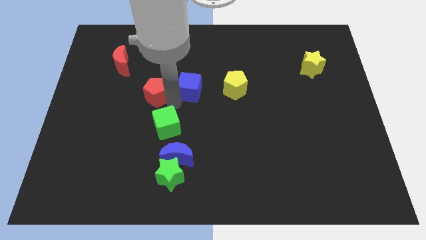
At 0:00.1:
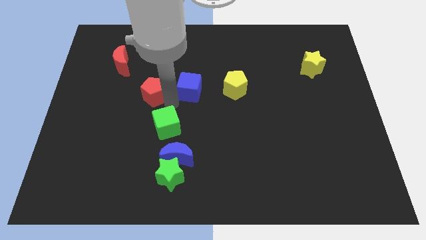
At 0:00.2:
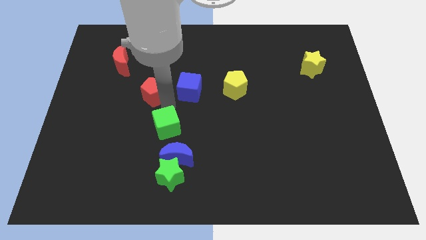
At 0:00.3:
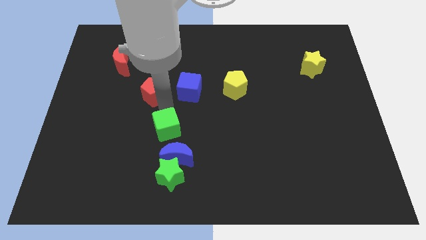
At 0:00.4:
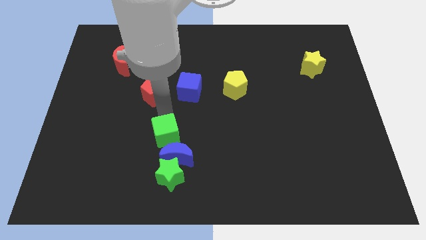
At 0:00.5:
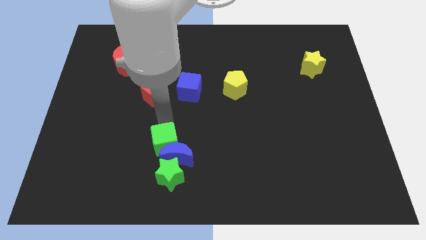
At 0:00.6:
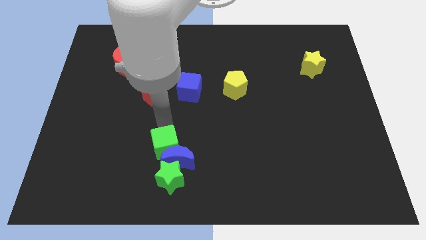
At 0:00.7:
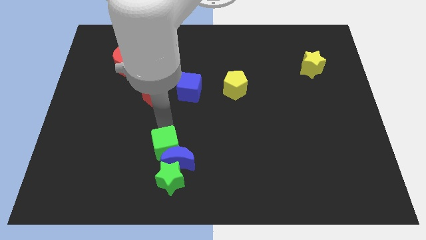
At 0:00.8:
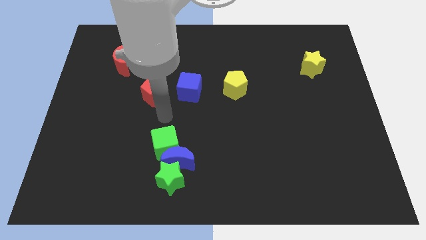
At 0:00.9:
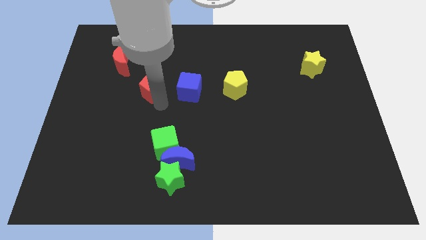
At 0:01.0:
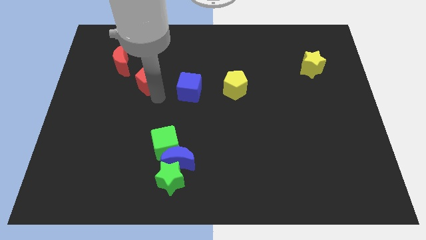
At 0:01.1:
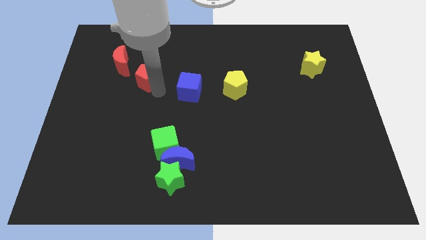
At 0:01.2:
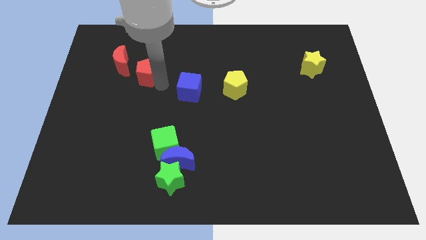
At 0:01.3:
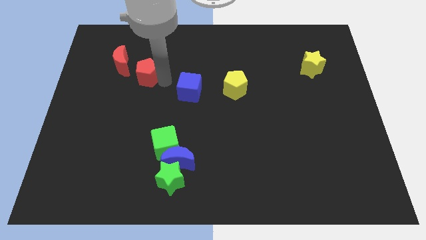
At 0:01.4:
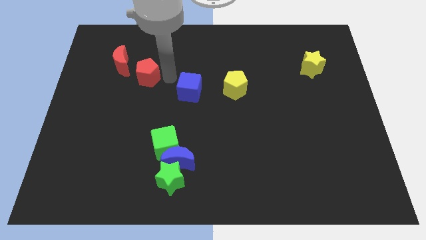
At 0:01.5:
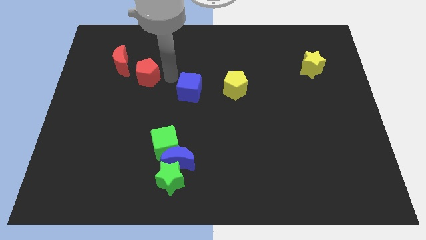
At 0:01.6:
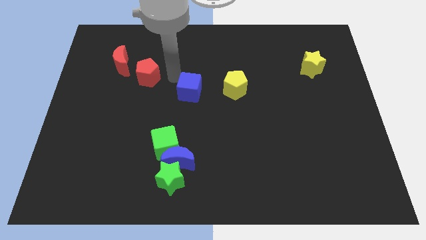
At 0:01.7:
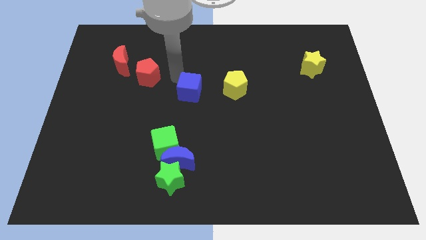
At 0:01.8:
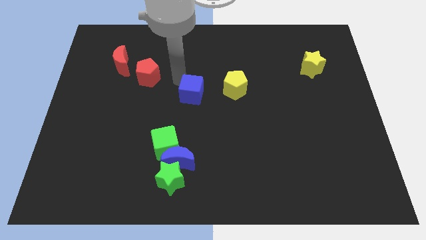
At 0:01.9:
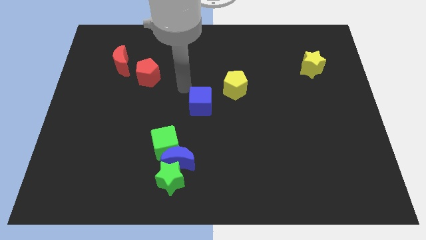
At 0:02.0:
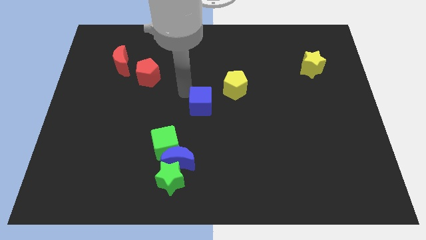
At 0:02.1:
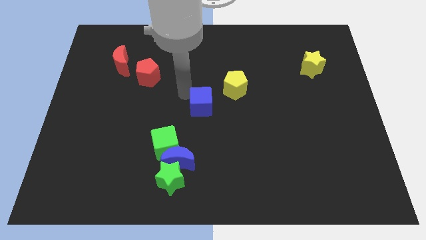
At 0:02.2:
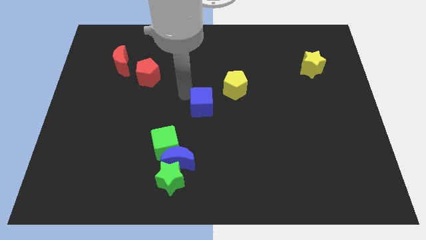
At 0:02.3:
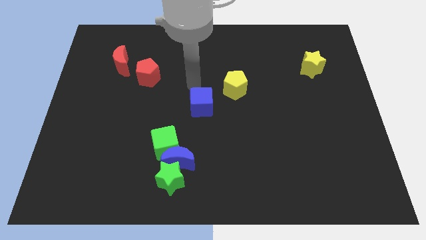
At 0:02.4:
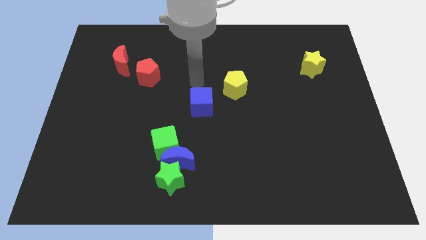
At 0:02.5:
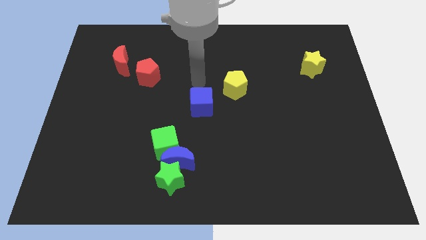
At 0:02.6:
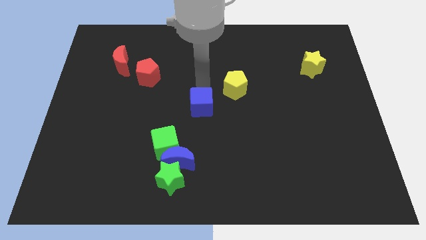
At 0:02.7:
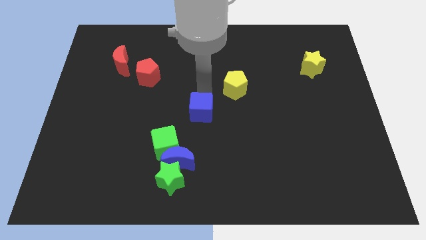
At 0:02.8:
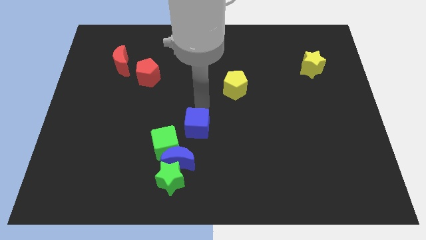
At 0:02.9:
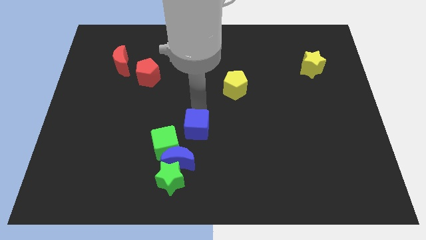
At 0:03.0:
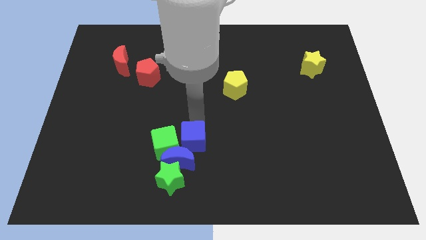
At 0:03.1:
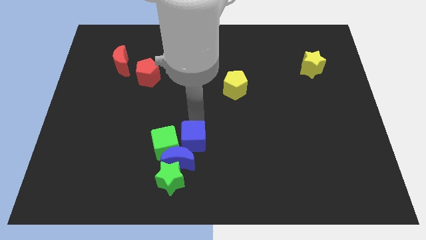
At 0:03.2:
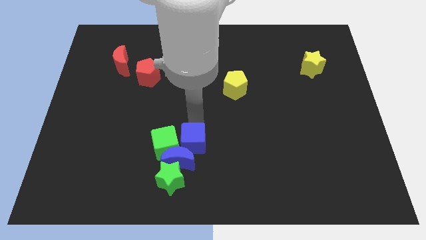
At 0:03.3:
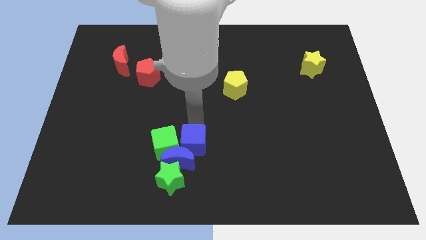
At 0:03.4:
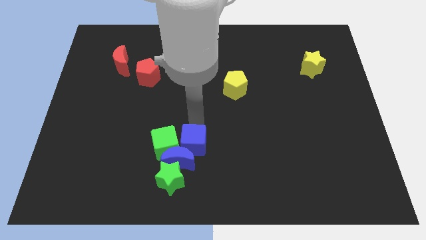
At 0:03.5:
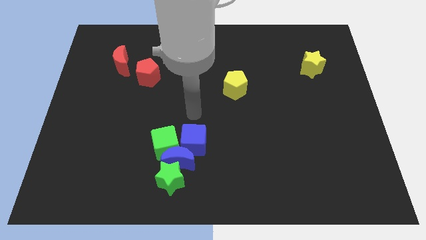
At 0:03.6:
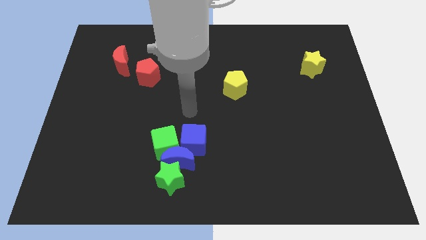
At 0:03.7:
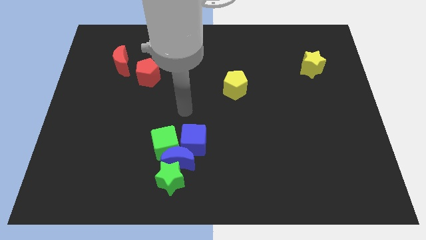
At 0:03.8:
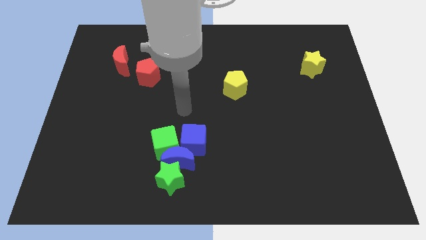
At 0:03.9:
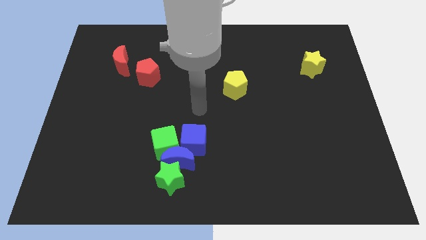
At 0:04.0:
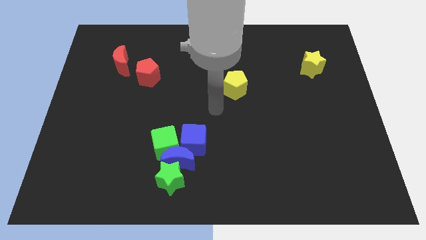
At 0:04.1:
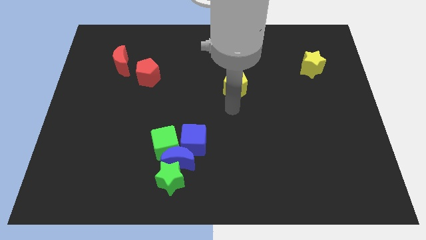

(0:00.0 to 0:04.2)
push the green cube and blue cube into the blue moon

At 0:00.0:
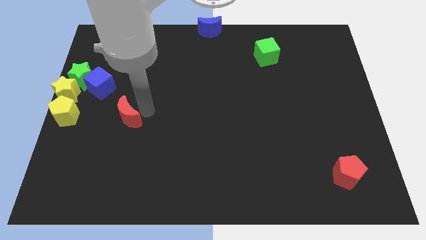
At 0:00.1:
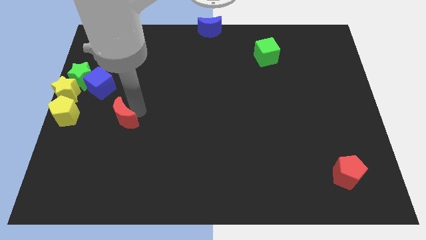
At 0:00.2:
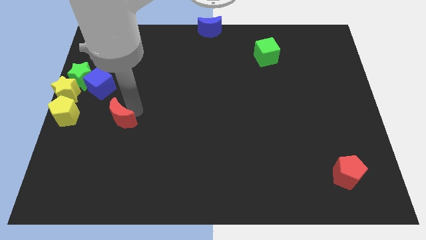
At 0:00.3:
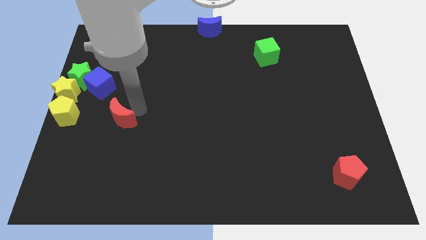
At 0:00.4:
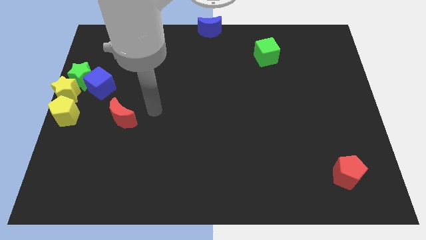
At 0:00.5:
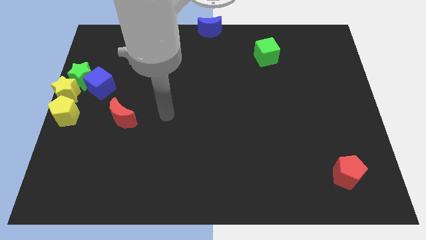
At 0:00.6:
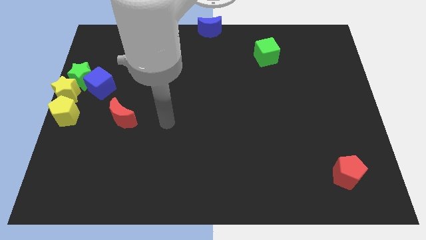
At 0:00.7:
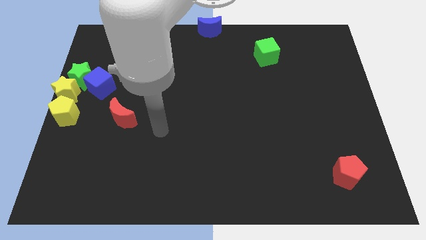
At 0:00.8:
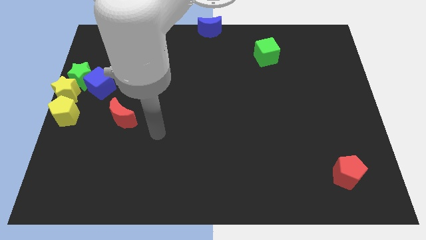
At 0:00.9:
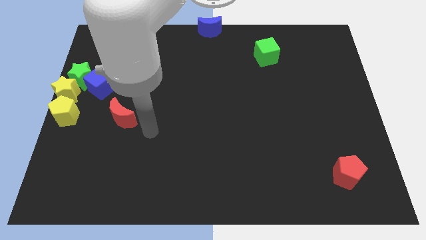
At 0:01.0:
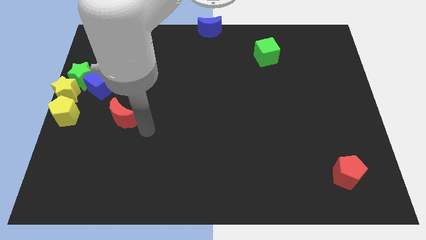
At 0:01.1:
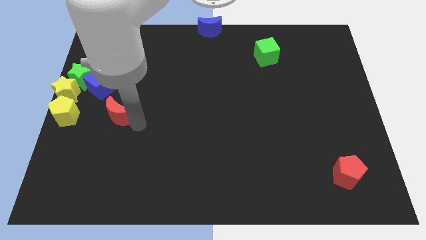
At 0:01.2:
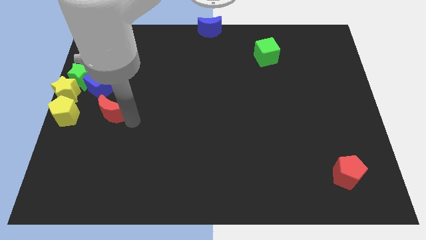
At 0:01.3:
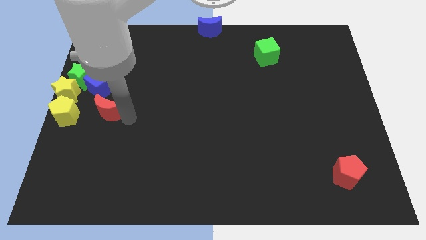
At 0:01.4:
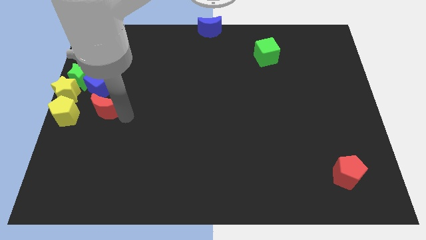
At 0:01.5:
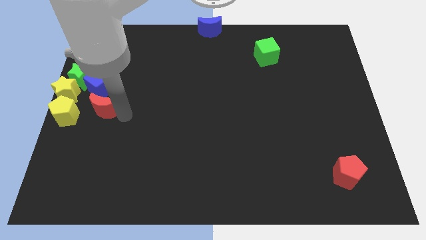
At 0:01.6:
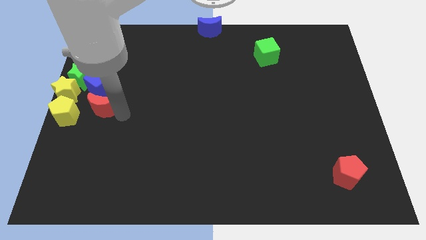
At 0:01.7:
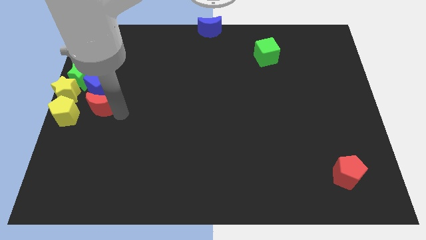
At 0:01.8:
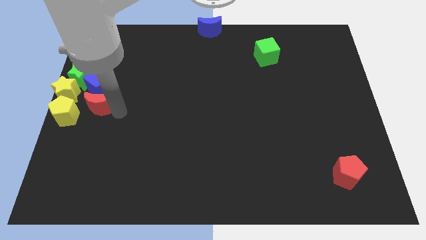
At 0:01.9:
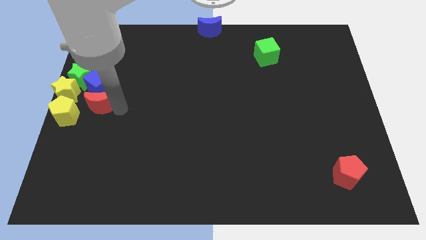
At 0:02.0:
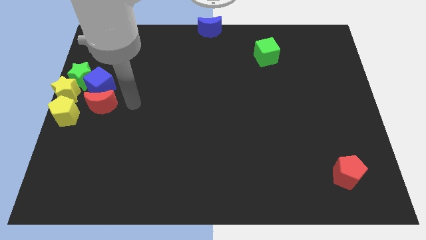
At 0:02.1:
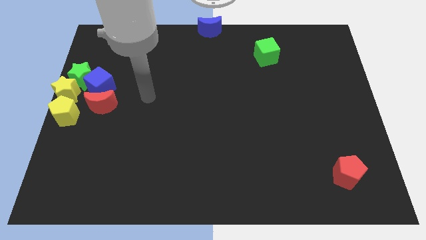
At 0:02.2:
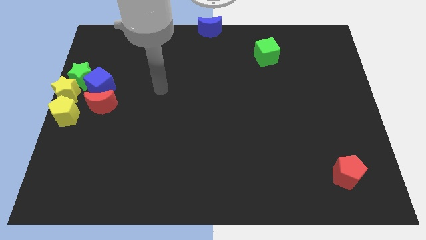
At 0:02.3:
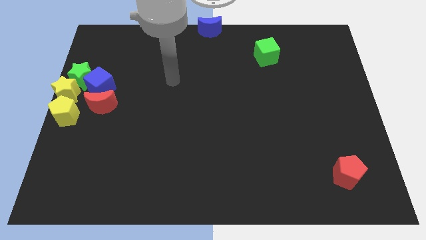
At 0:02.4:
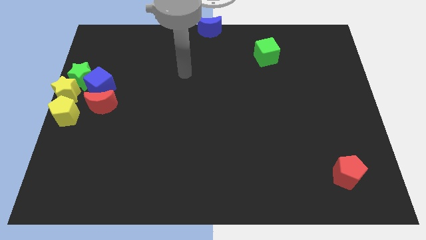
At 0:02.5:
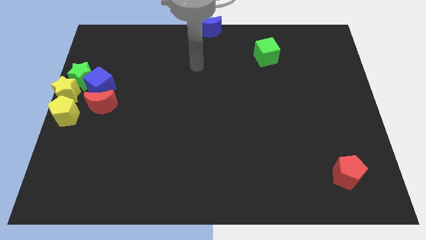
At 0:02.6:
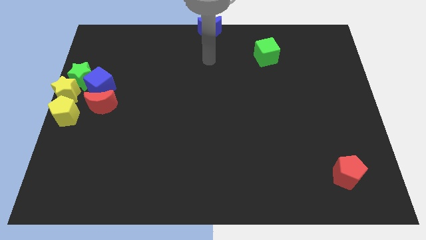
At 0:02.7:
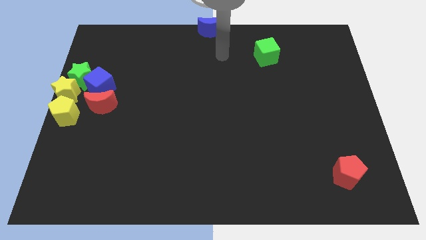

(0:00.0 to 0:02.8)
move the red crescent below the blue cube

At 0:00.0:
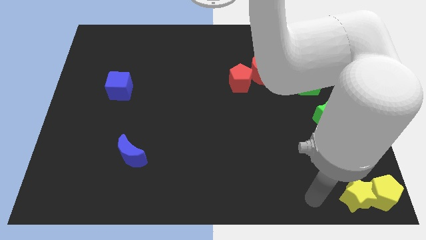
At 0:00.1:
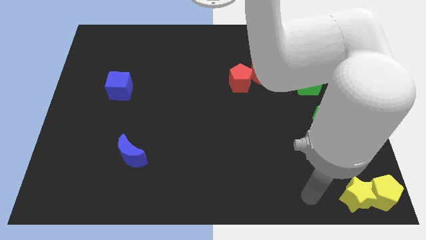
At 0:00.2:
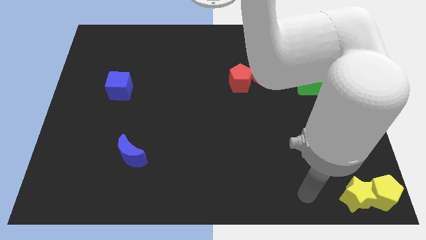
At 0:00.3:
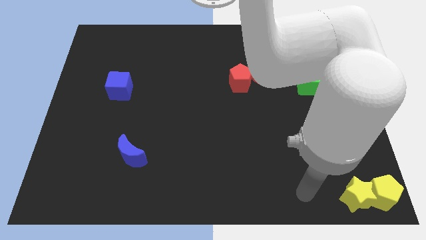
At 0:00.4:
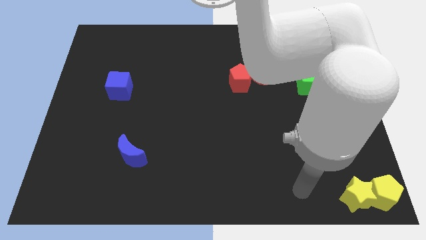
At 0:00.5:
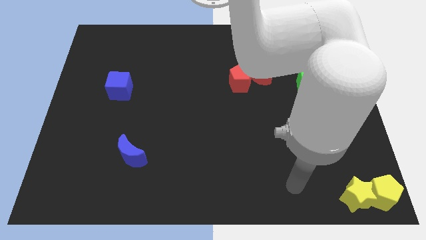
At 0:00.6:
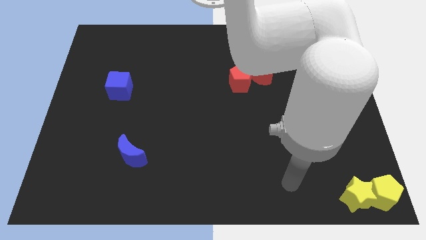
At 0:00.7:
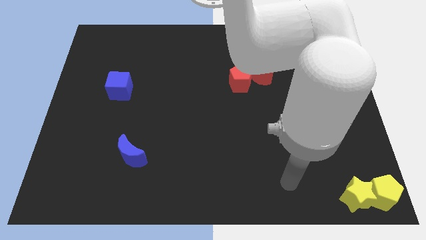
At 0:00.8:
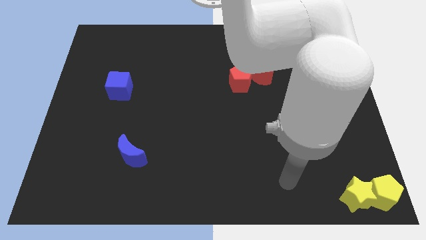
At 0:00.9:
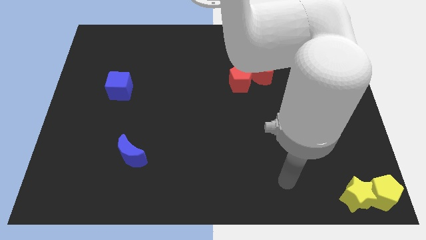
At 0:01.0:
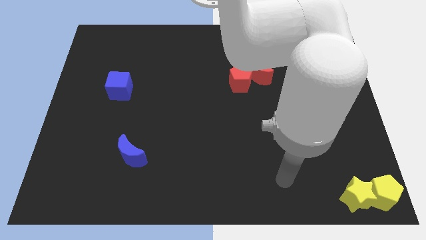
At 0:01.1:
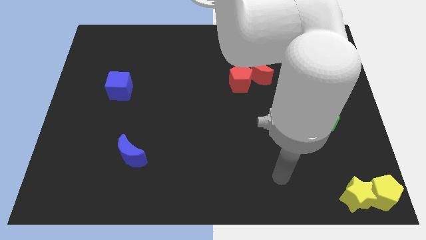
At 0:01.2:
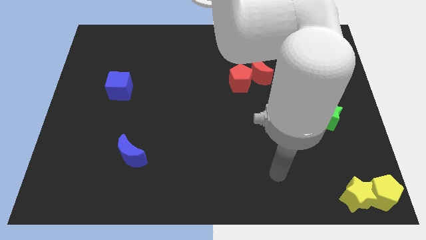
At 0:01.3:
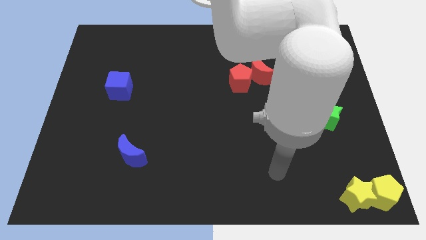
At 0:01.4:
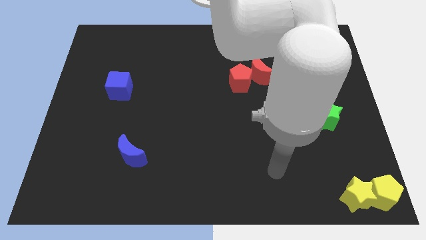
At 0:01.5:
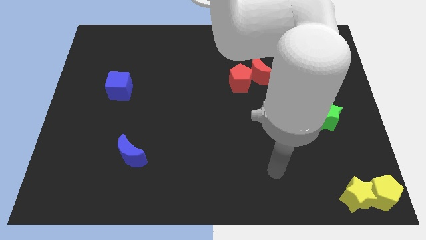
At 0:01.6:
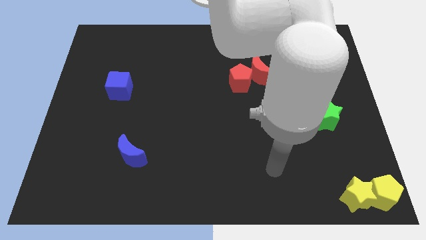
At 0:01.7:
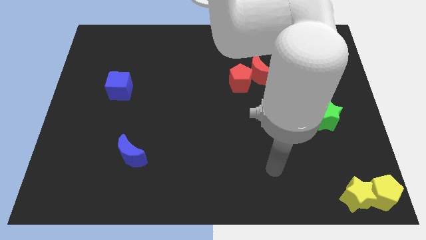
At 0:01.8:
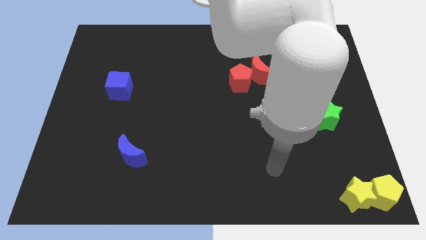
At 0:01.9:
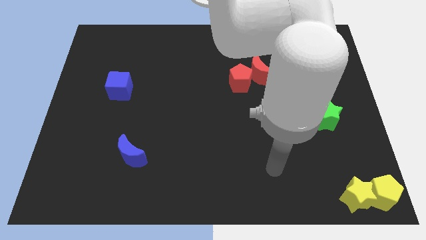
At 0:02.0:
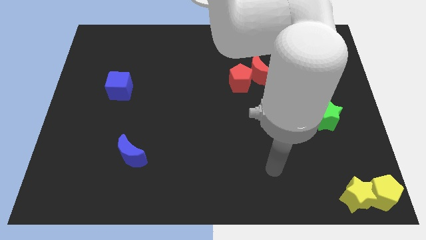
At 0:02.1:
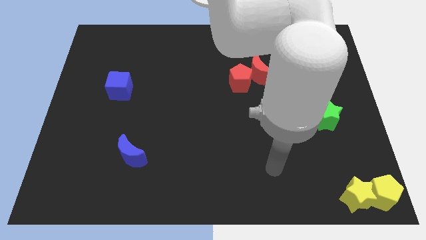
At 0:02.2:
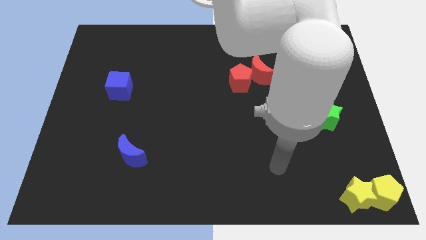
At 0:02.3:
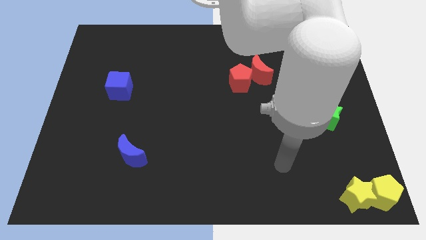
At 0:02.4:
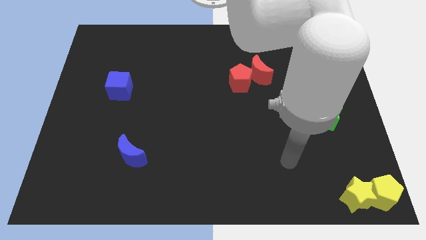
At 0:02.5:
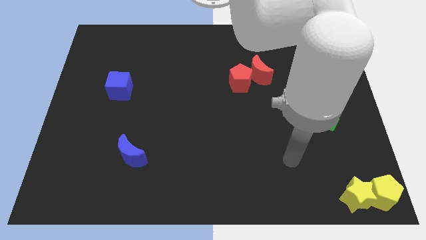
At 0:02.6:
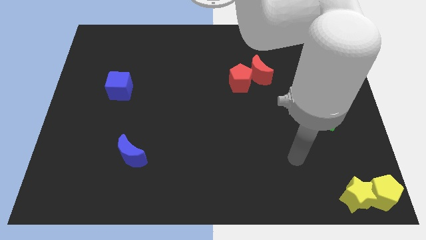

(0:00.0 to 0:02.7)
move the arm left diagonal to yellow star
